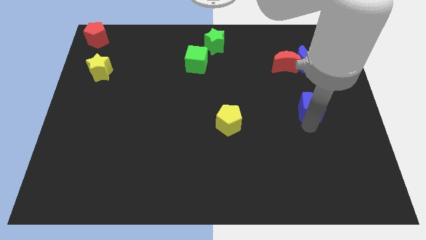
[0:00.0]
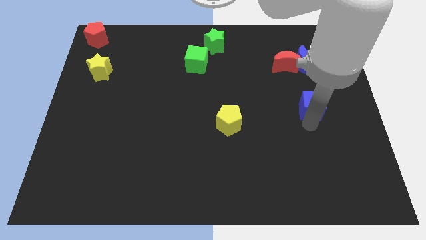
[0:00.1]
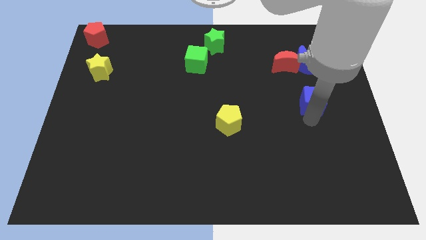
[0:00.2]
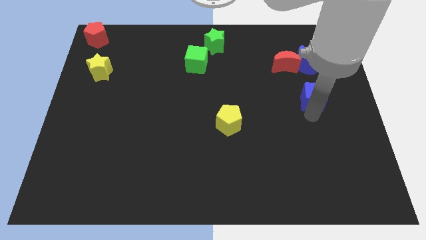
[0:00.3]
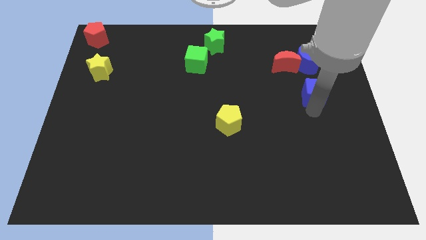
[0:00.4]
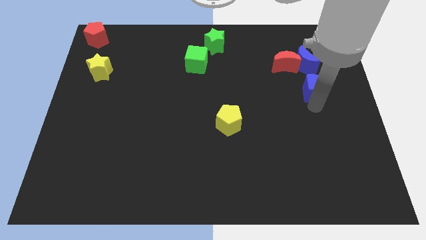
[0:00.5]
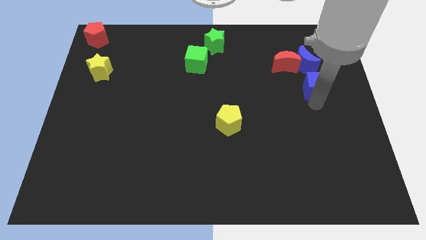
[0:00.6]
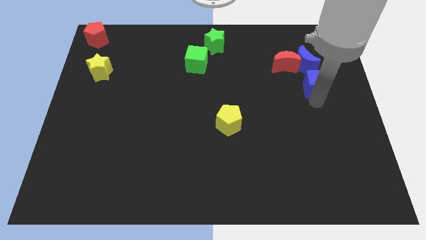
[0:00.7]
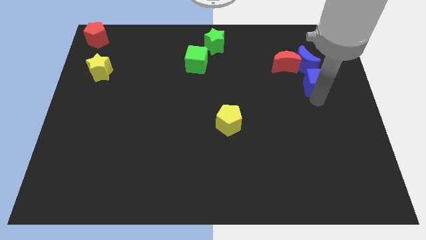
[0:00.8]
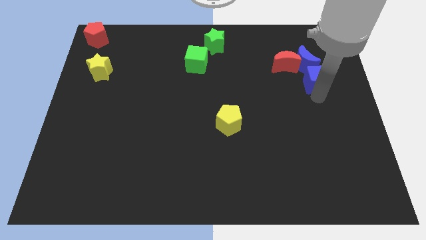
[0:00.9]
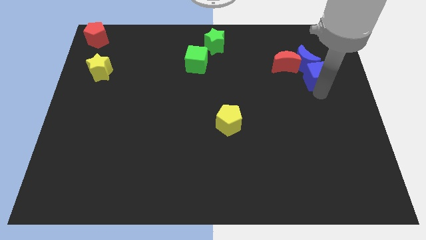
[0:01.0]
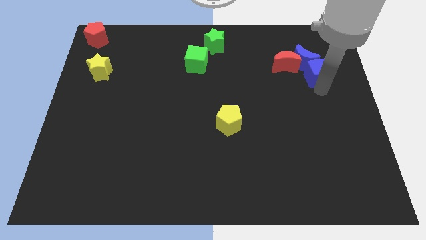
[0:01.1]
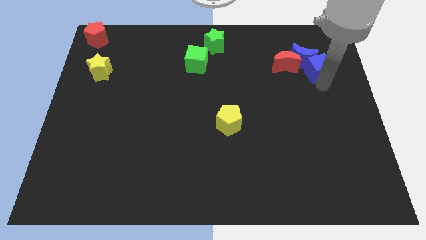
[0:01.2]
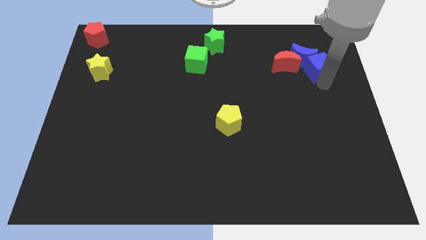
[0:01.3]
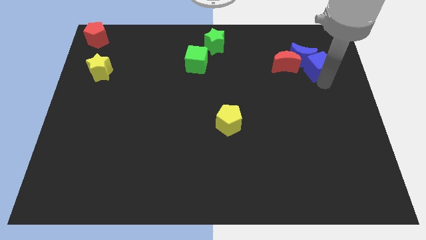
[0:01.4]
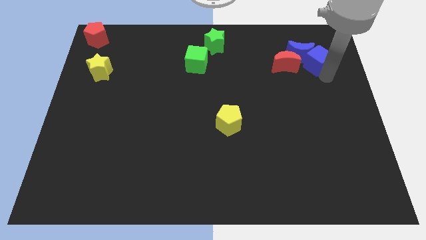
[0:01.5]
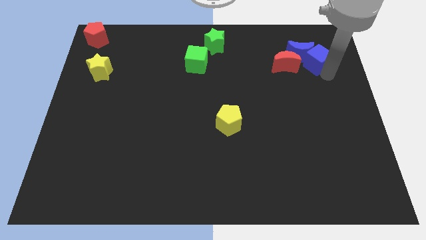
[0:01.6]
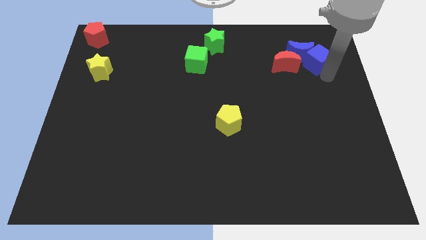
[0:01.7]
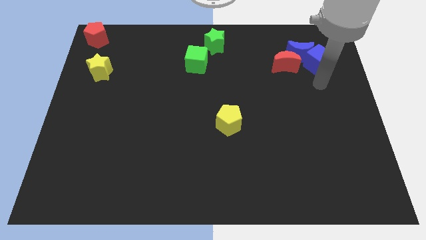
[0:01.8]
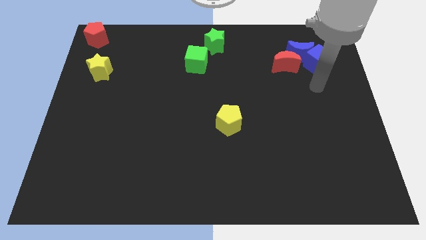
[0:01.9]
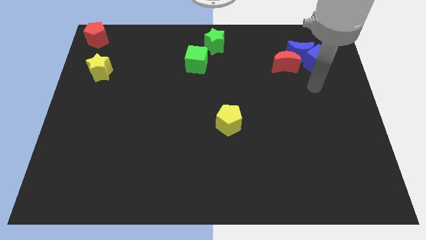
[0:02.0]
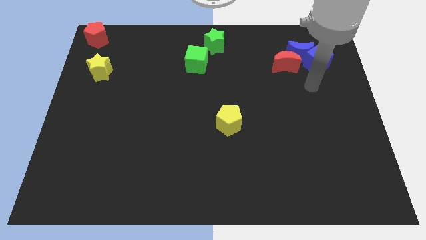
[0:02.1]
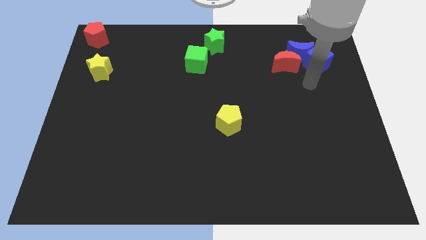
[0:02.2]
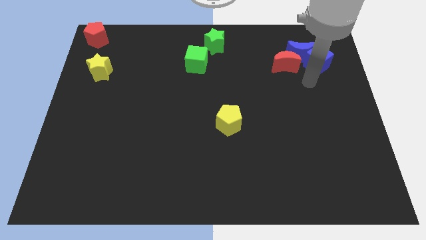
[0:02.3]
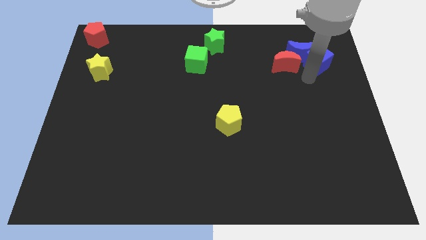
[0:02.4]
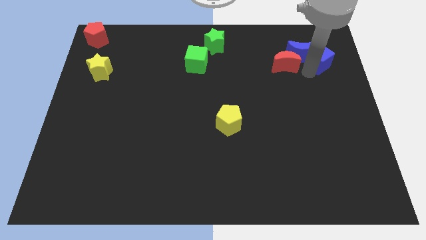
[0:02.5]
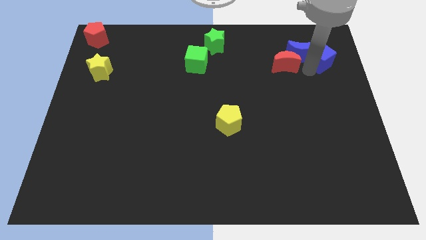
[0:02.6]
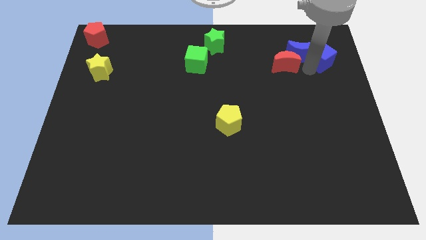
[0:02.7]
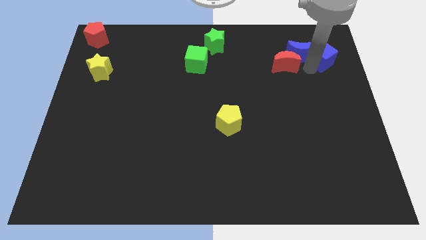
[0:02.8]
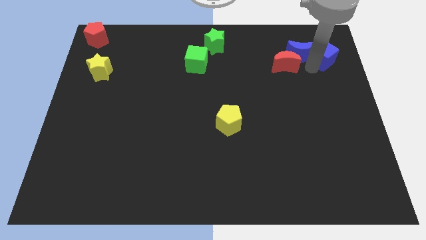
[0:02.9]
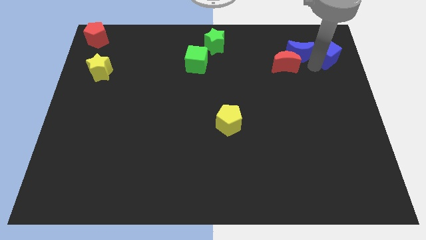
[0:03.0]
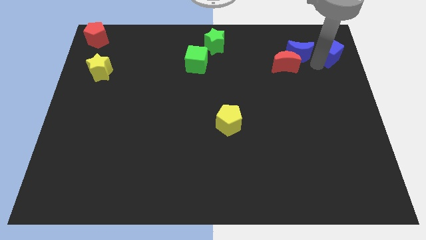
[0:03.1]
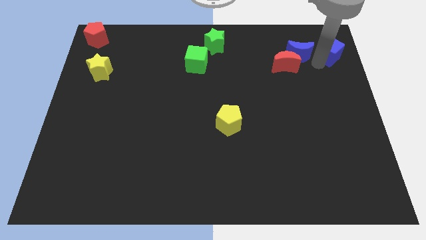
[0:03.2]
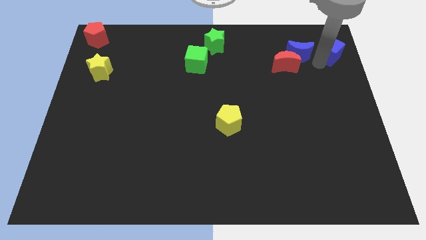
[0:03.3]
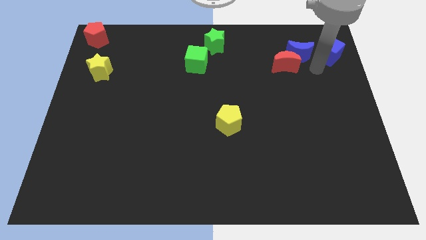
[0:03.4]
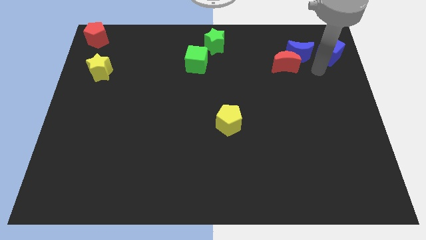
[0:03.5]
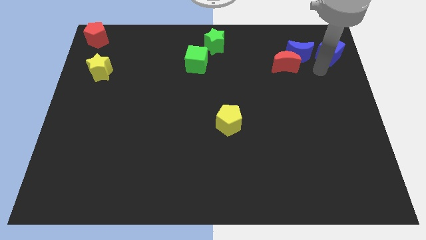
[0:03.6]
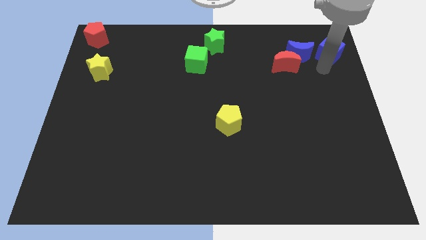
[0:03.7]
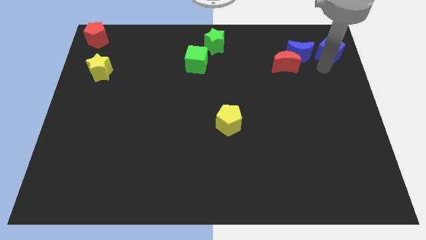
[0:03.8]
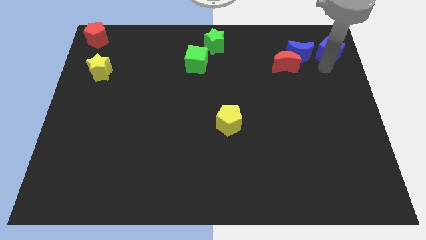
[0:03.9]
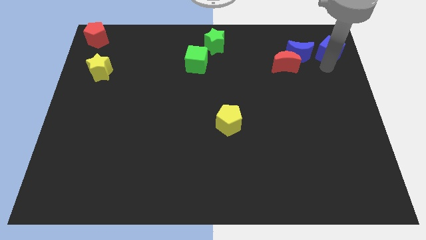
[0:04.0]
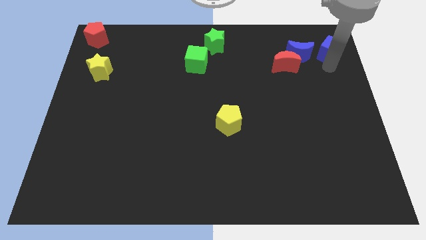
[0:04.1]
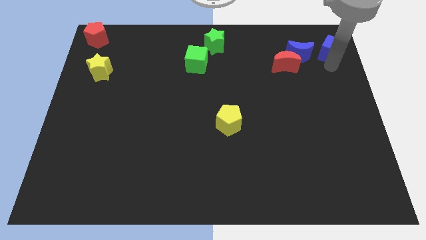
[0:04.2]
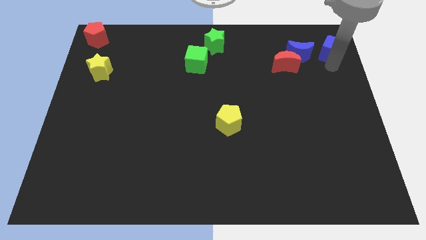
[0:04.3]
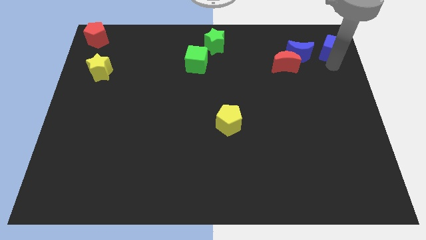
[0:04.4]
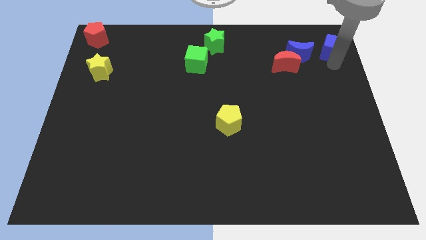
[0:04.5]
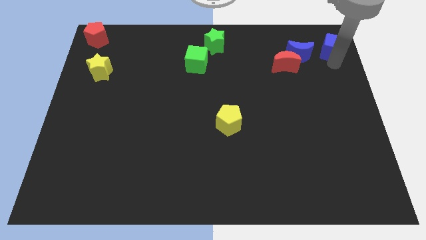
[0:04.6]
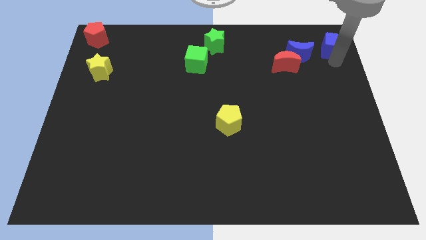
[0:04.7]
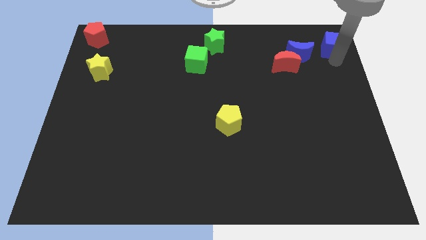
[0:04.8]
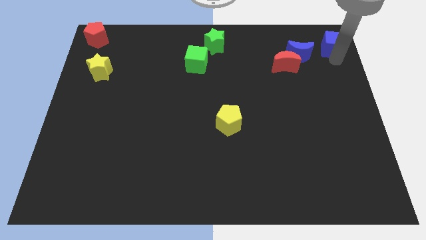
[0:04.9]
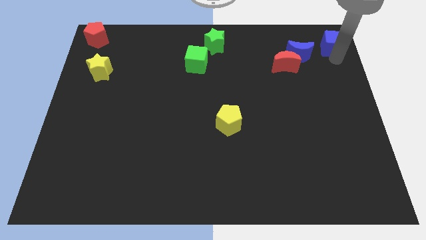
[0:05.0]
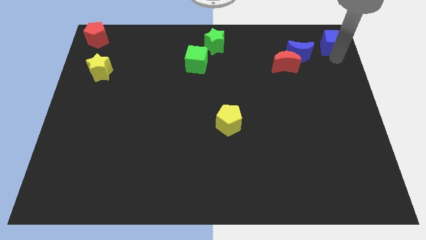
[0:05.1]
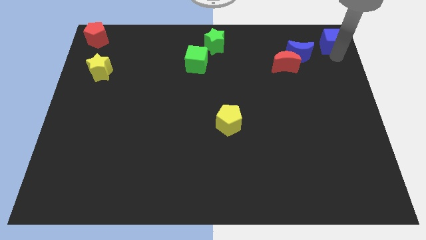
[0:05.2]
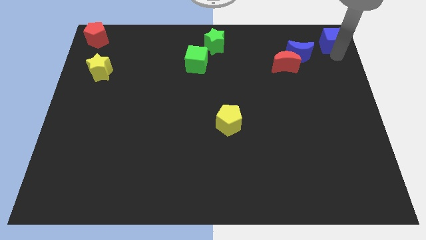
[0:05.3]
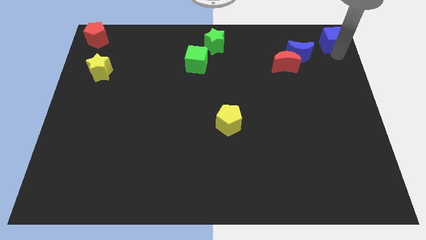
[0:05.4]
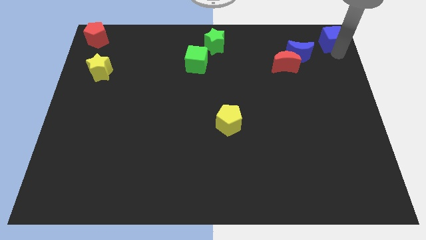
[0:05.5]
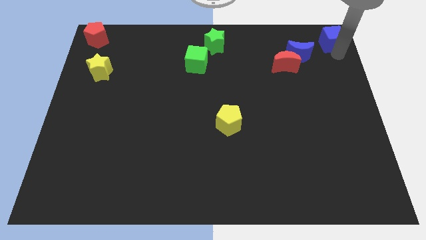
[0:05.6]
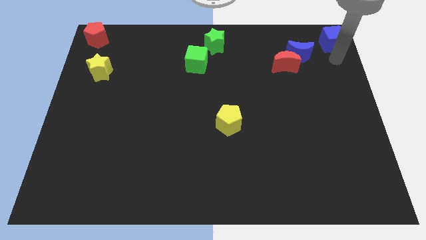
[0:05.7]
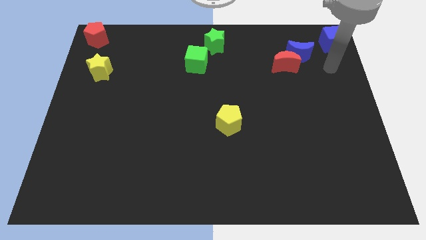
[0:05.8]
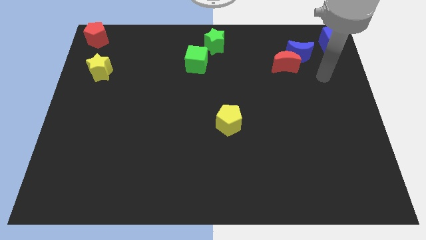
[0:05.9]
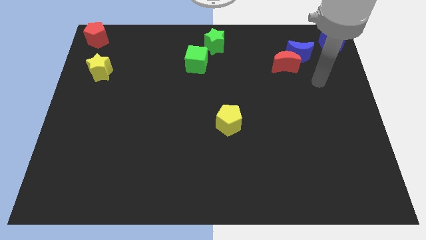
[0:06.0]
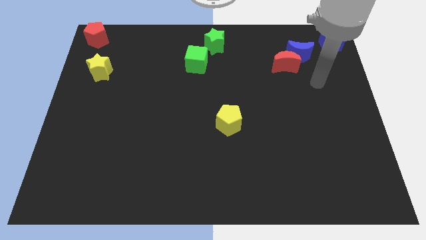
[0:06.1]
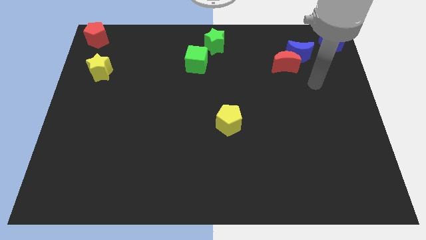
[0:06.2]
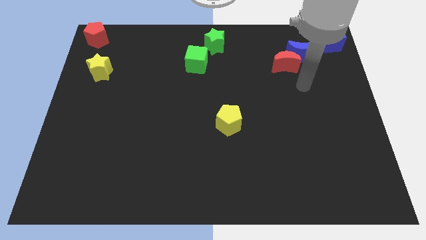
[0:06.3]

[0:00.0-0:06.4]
push the blue cube slightly towards the top right corner of the board

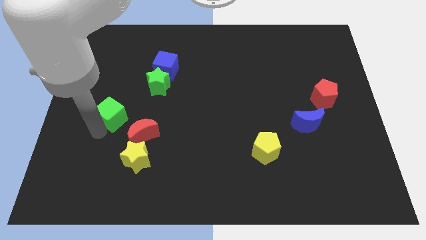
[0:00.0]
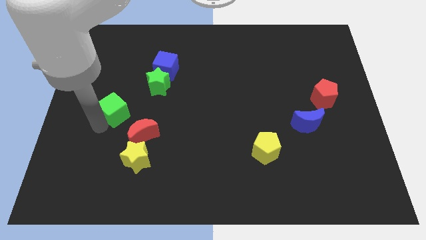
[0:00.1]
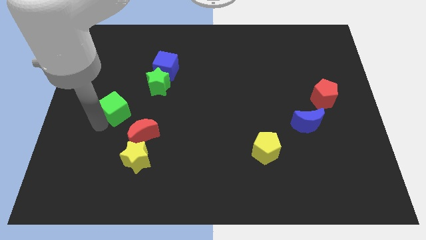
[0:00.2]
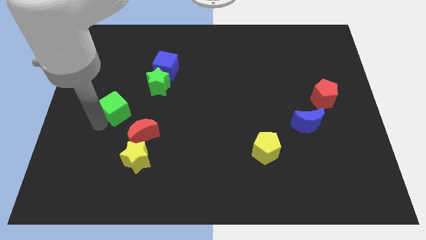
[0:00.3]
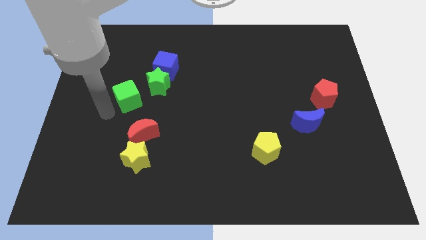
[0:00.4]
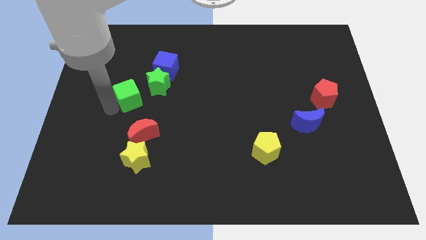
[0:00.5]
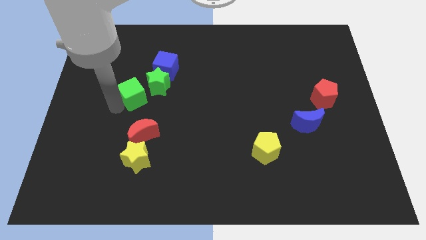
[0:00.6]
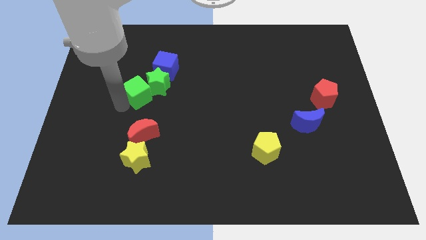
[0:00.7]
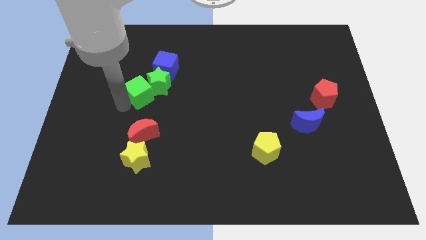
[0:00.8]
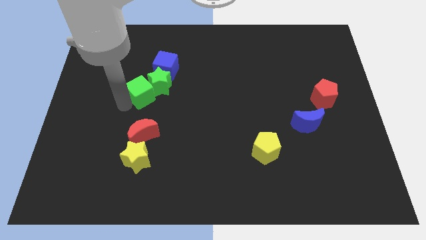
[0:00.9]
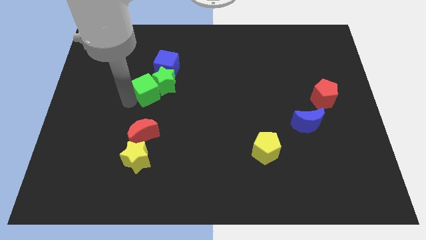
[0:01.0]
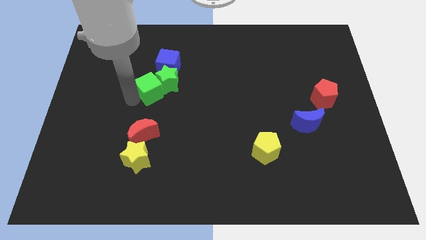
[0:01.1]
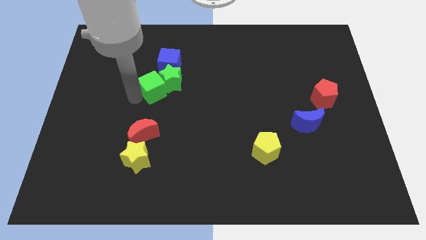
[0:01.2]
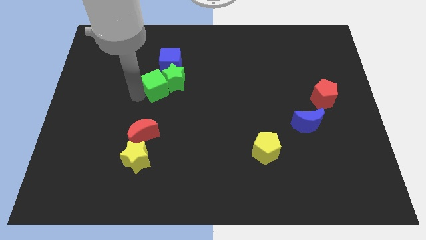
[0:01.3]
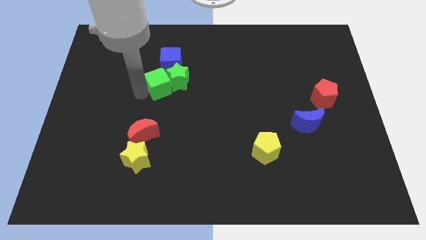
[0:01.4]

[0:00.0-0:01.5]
push the green cube into the green star

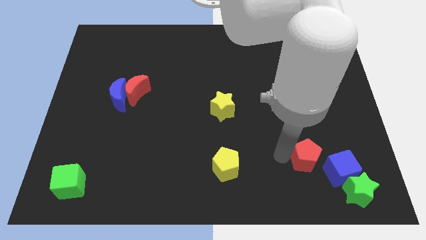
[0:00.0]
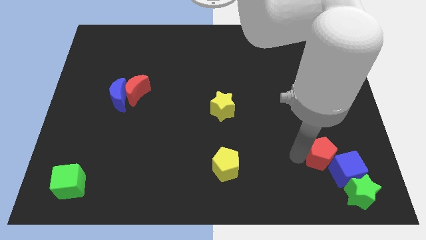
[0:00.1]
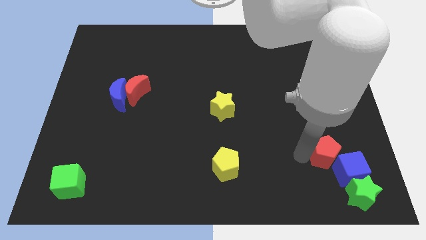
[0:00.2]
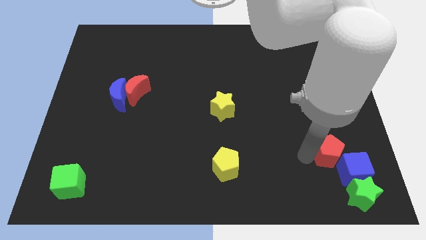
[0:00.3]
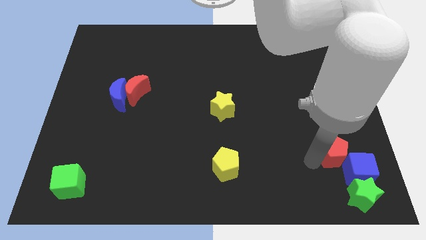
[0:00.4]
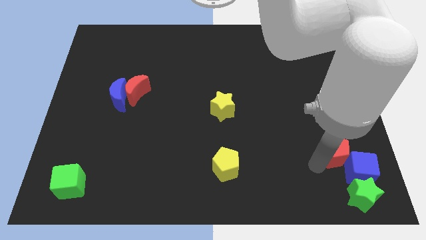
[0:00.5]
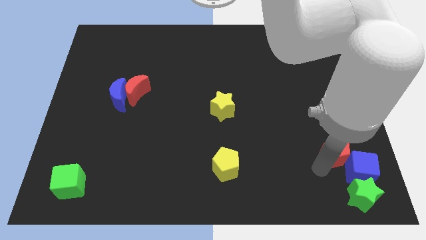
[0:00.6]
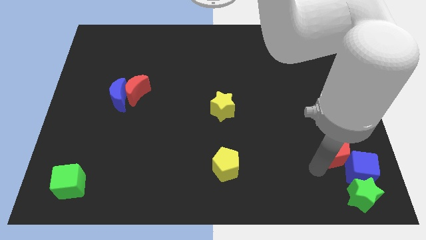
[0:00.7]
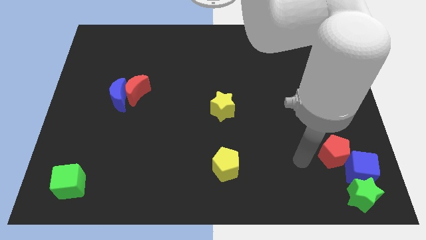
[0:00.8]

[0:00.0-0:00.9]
push the red pentagon diagonal to the blue cube
